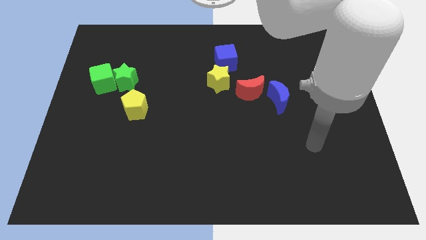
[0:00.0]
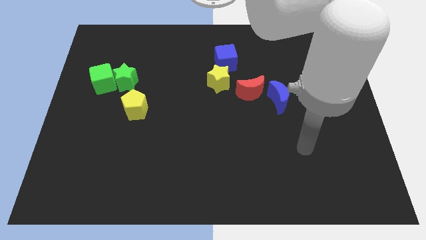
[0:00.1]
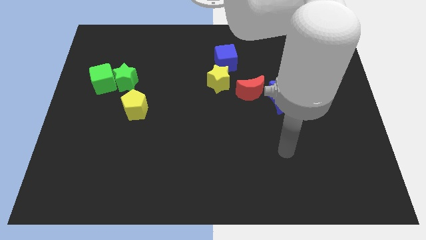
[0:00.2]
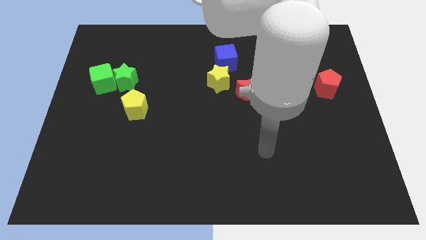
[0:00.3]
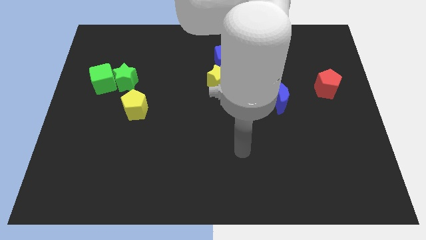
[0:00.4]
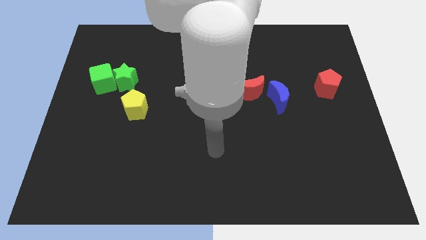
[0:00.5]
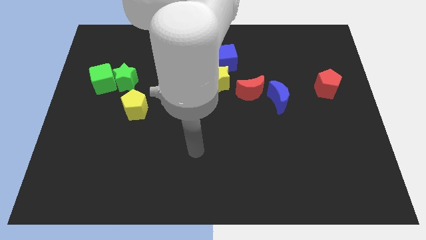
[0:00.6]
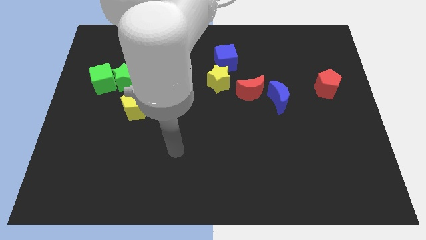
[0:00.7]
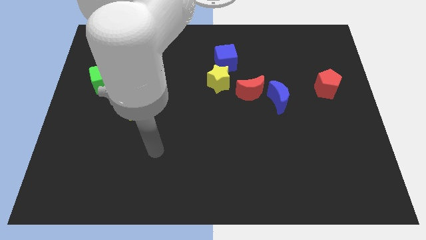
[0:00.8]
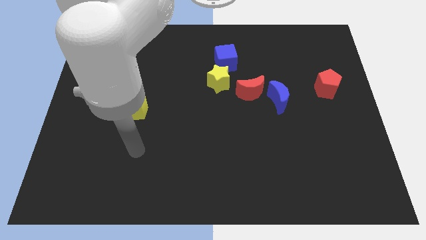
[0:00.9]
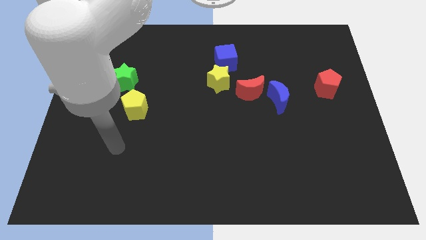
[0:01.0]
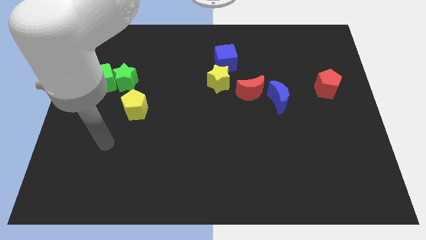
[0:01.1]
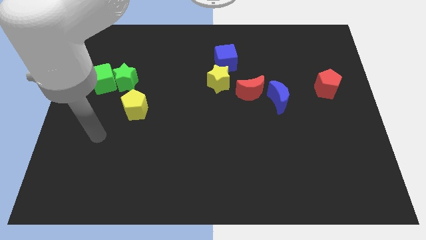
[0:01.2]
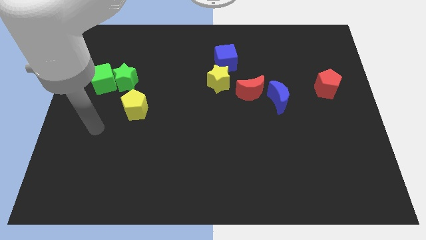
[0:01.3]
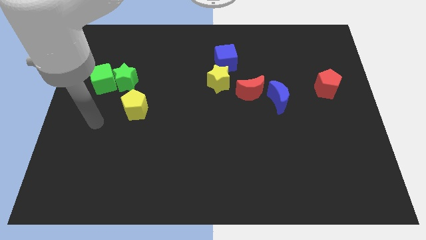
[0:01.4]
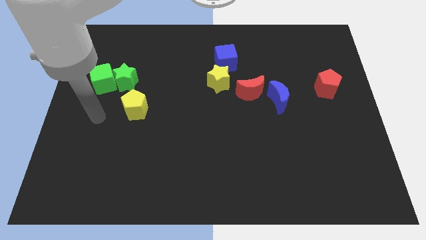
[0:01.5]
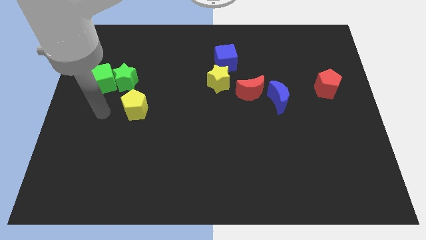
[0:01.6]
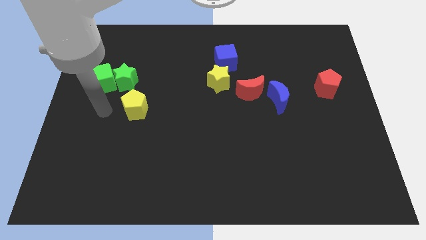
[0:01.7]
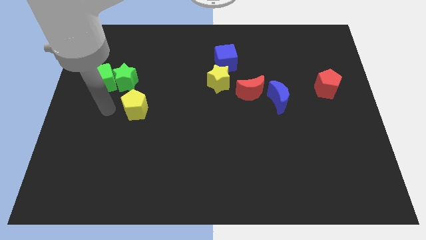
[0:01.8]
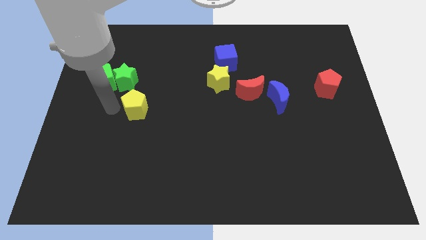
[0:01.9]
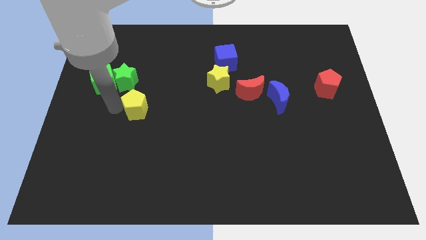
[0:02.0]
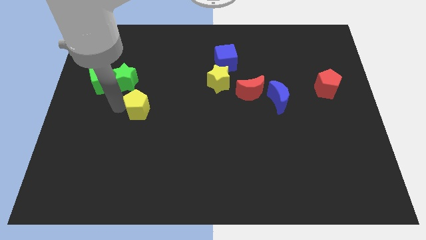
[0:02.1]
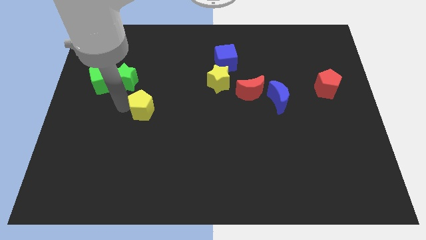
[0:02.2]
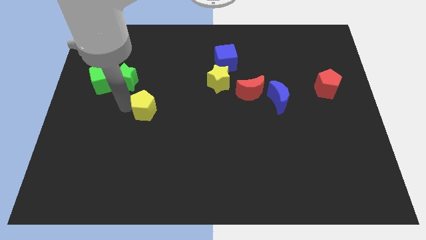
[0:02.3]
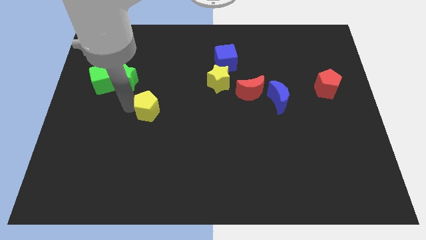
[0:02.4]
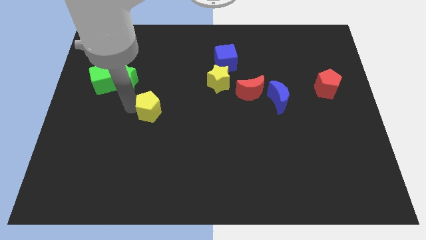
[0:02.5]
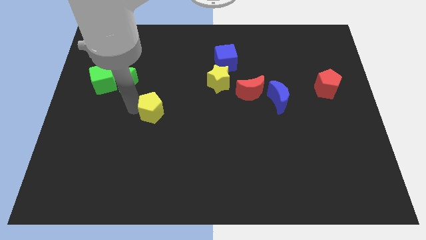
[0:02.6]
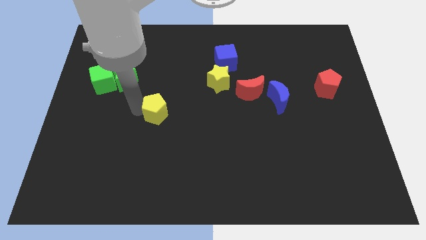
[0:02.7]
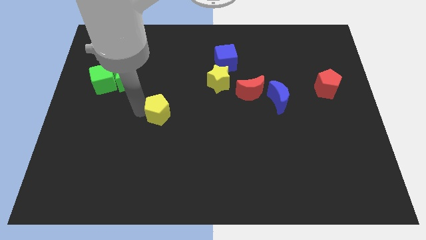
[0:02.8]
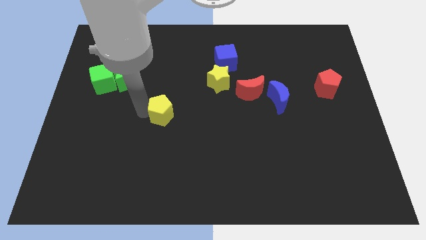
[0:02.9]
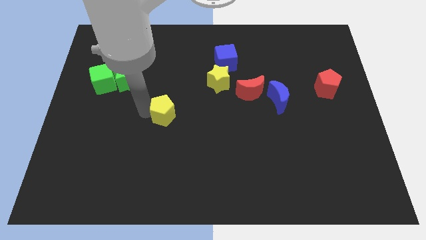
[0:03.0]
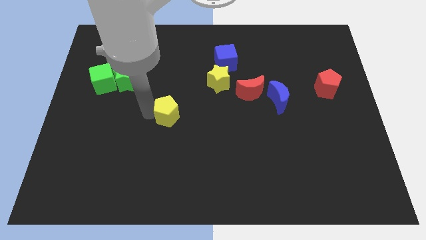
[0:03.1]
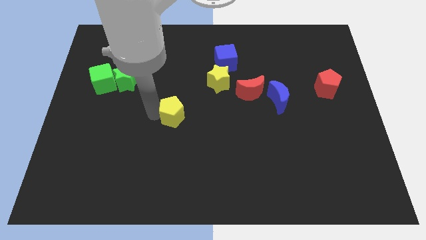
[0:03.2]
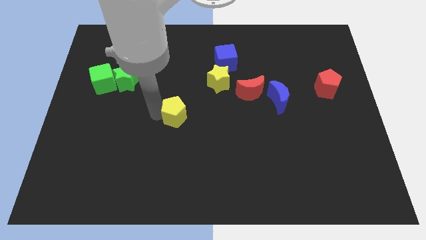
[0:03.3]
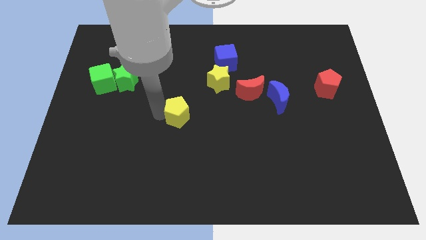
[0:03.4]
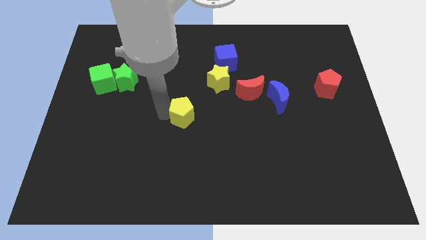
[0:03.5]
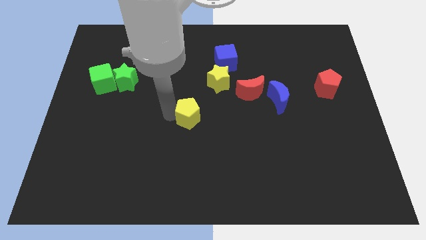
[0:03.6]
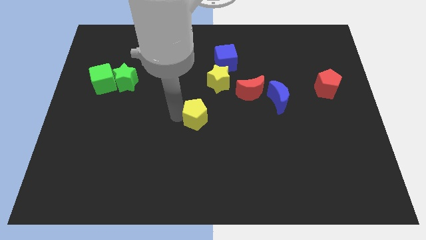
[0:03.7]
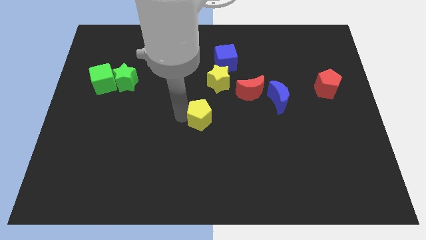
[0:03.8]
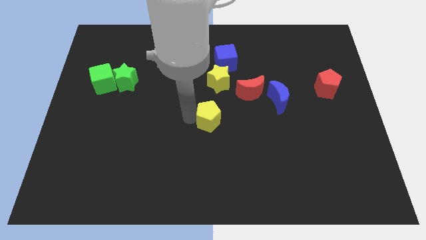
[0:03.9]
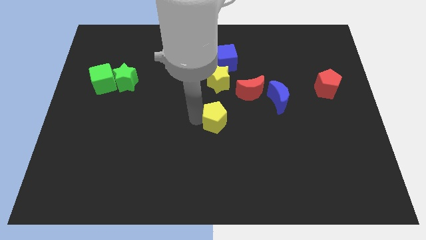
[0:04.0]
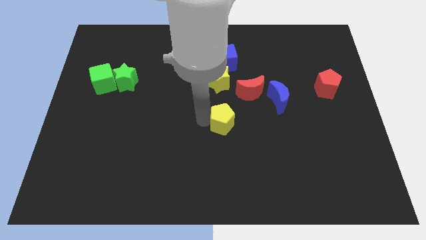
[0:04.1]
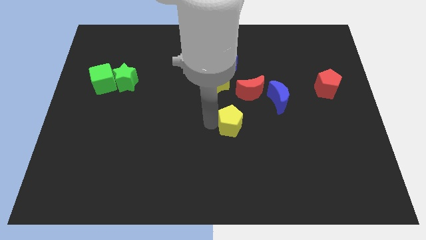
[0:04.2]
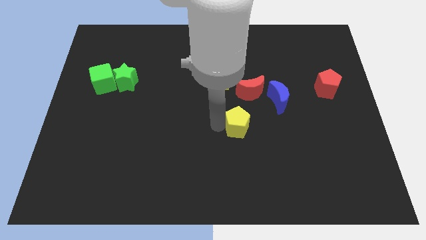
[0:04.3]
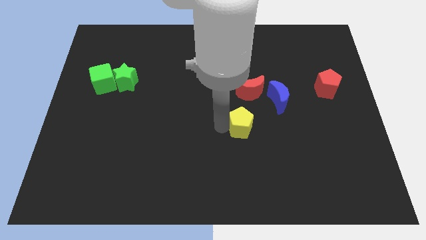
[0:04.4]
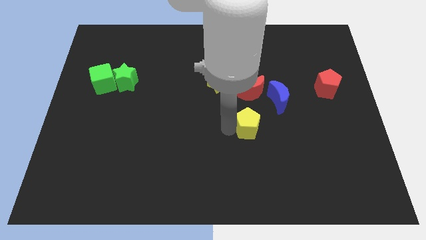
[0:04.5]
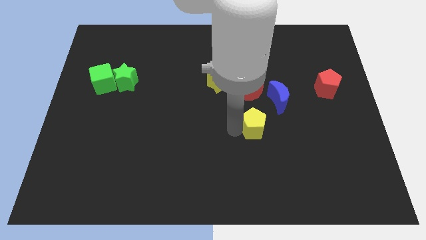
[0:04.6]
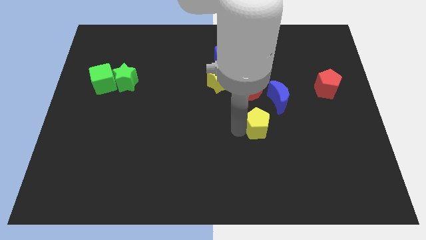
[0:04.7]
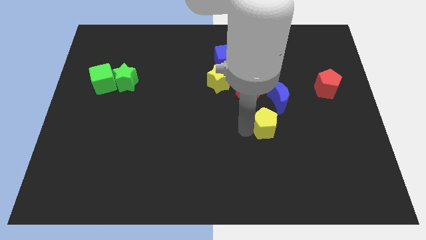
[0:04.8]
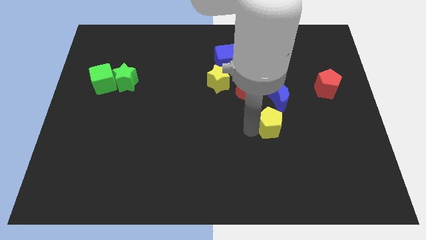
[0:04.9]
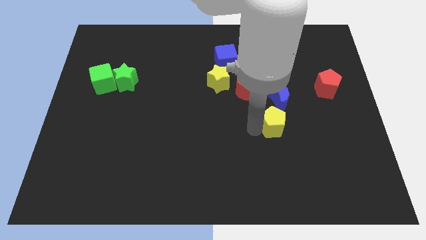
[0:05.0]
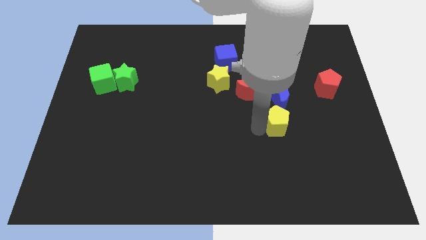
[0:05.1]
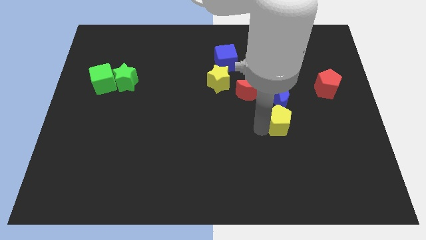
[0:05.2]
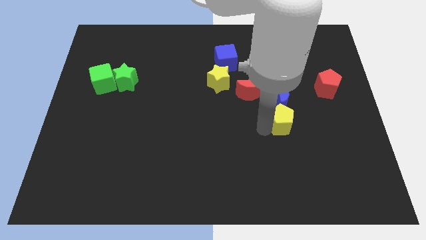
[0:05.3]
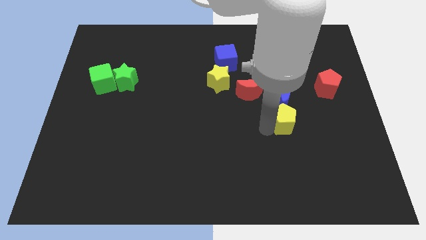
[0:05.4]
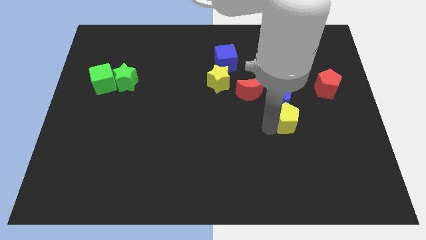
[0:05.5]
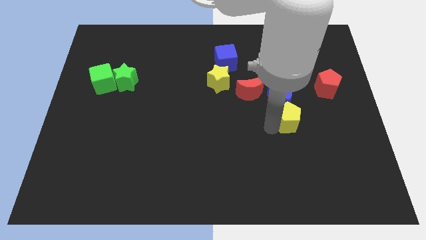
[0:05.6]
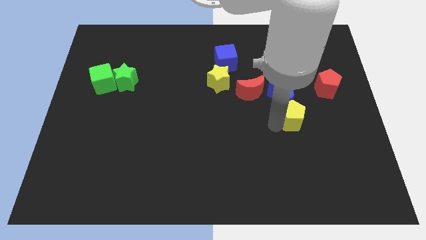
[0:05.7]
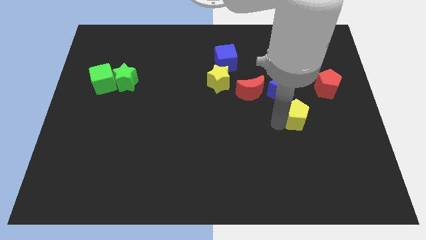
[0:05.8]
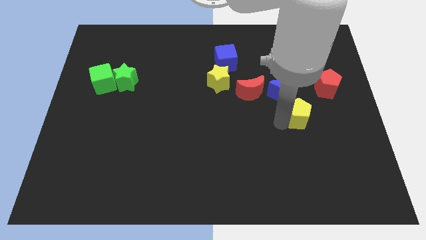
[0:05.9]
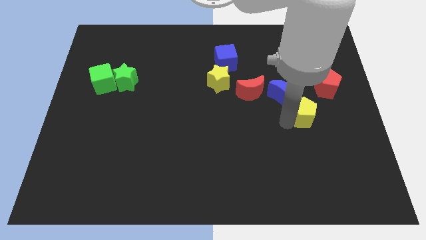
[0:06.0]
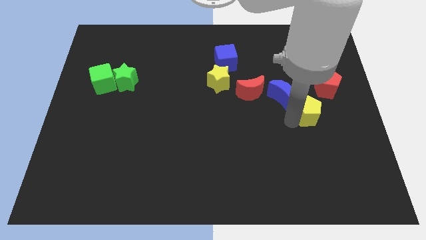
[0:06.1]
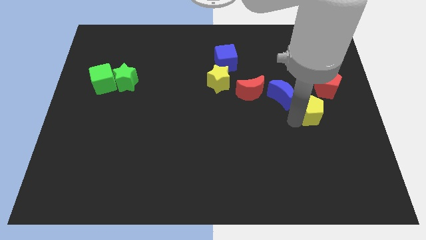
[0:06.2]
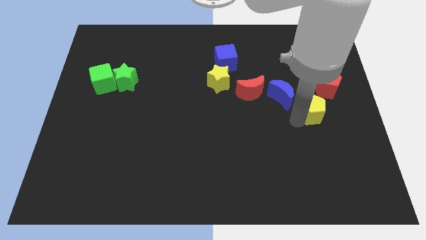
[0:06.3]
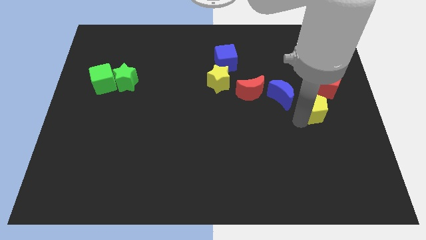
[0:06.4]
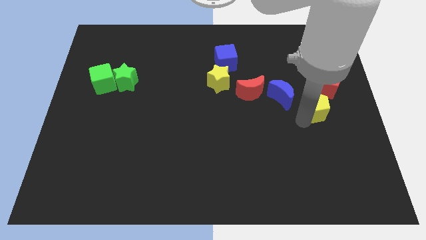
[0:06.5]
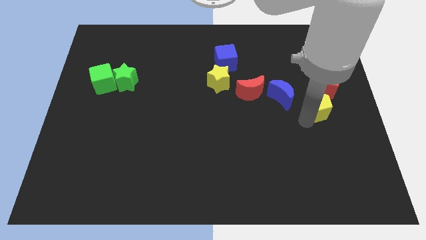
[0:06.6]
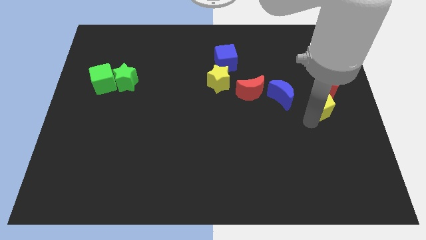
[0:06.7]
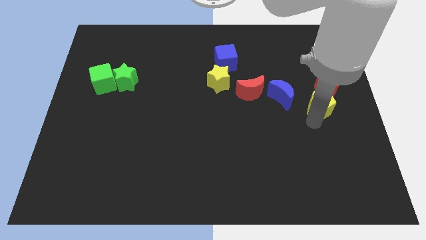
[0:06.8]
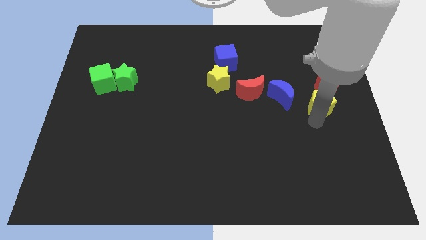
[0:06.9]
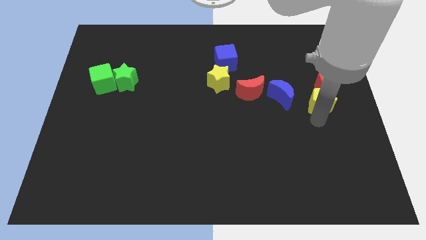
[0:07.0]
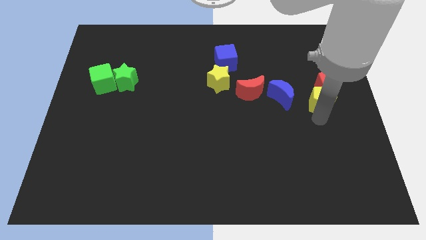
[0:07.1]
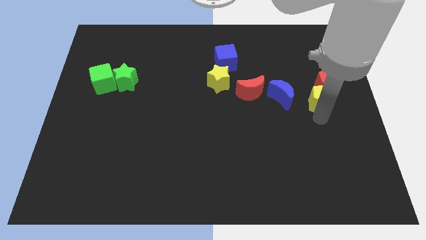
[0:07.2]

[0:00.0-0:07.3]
put the yellow pentagon towards the red pentagon

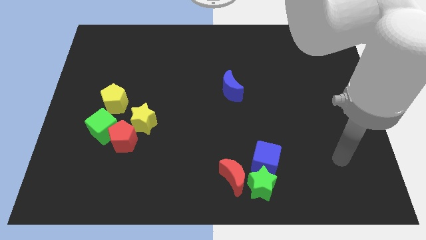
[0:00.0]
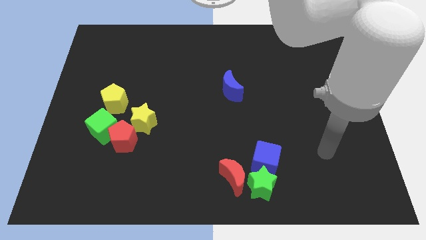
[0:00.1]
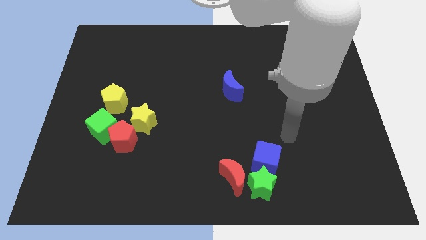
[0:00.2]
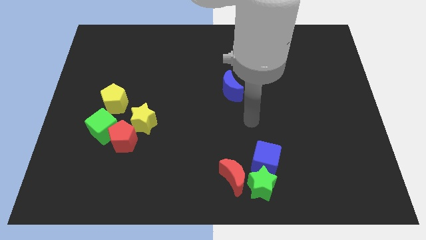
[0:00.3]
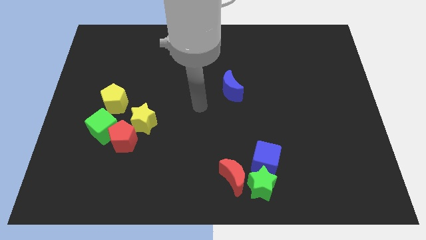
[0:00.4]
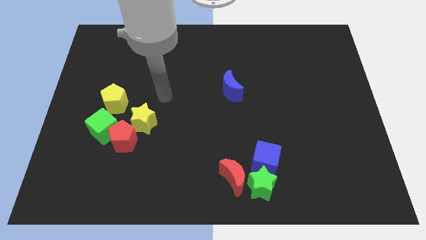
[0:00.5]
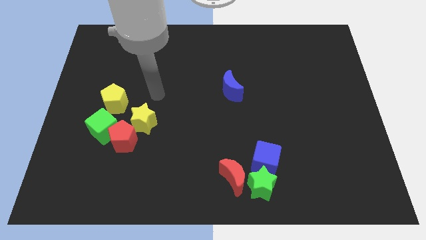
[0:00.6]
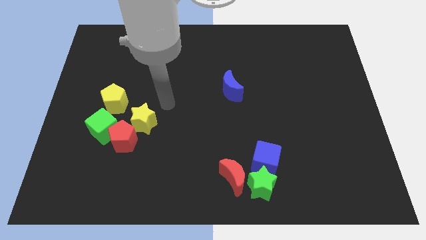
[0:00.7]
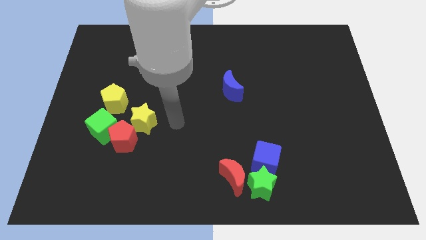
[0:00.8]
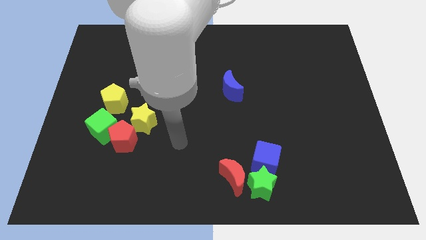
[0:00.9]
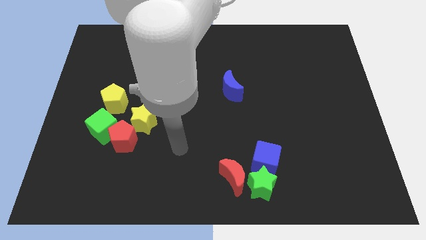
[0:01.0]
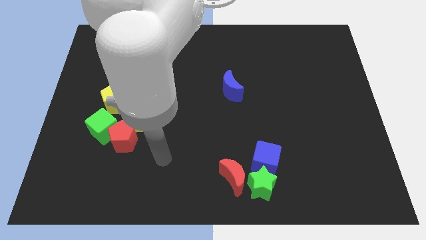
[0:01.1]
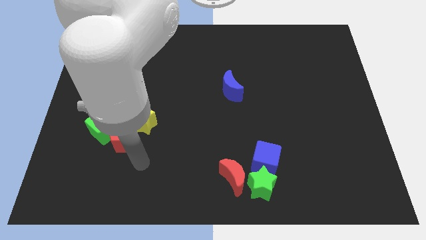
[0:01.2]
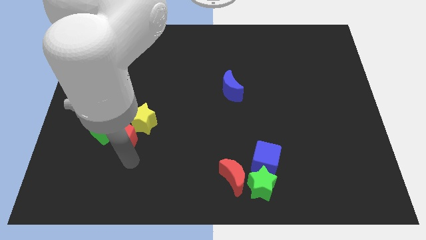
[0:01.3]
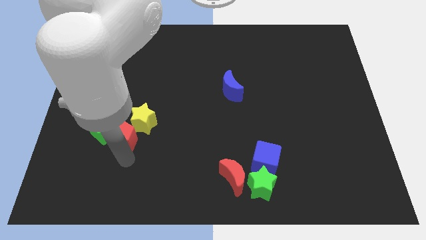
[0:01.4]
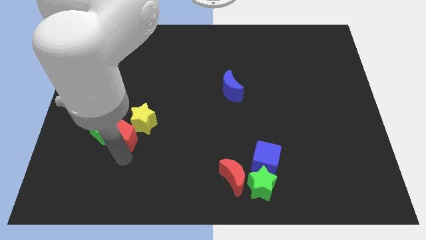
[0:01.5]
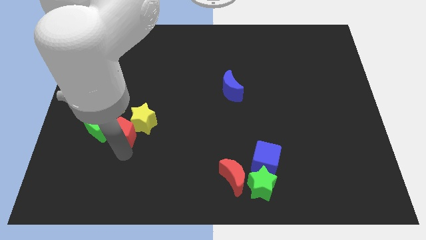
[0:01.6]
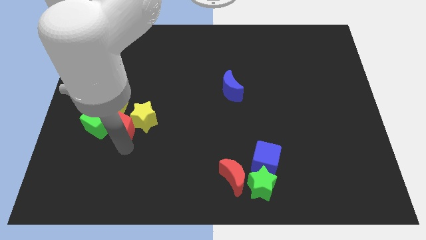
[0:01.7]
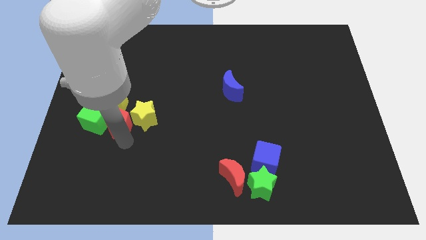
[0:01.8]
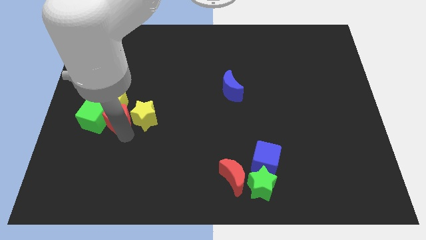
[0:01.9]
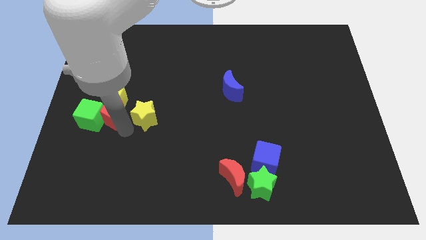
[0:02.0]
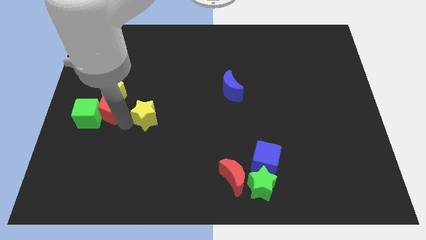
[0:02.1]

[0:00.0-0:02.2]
slide the red pentagon next to the yellow pentagon
